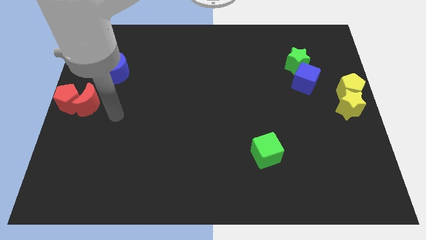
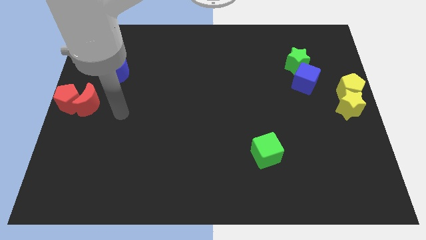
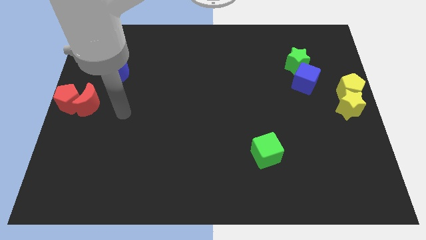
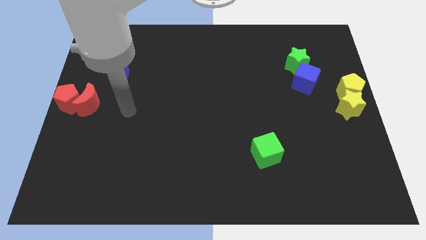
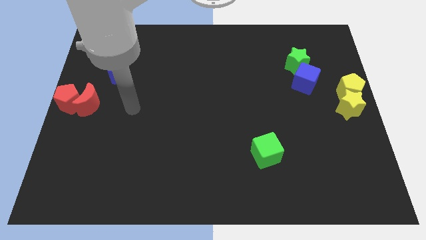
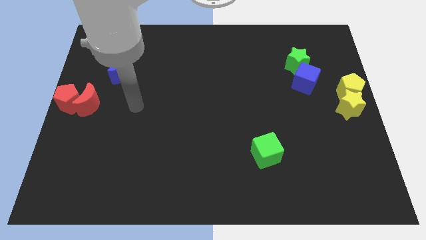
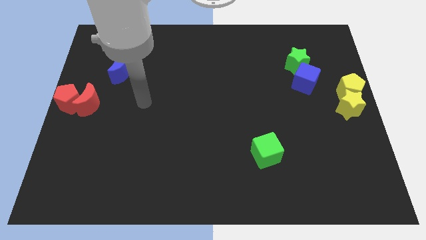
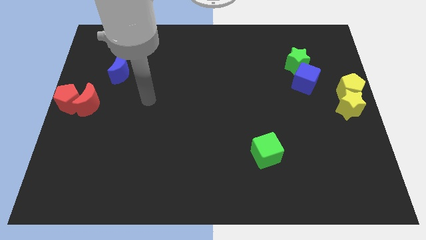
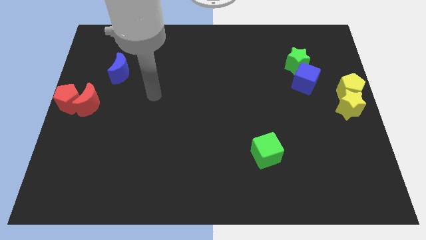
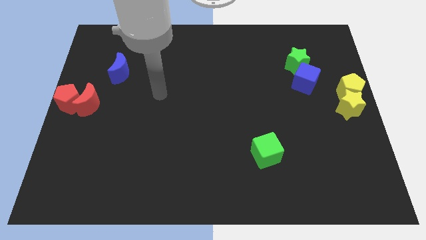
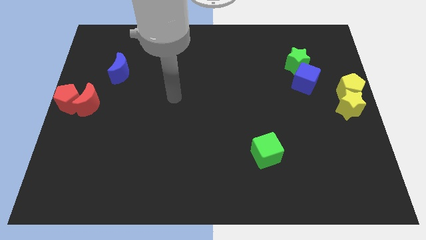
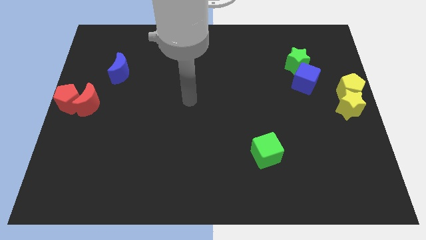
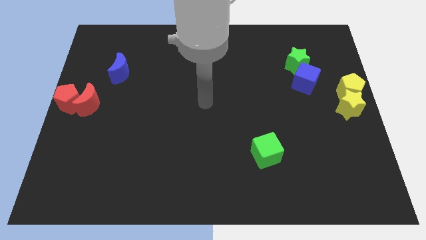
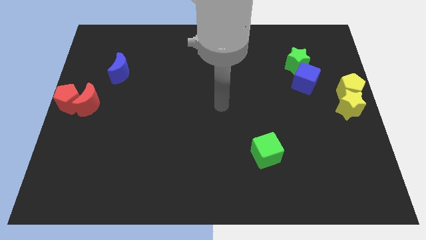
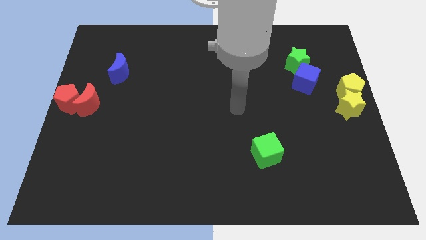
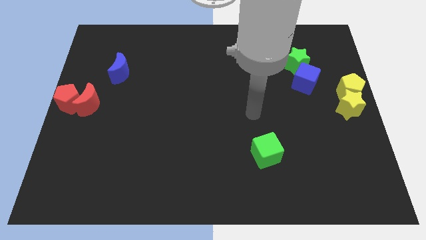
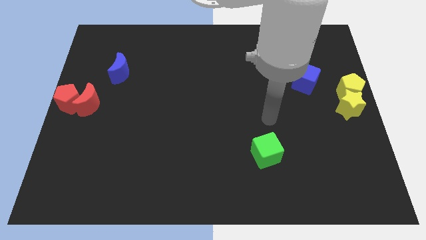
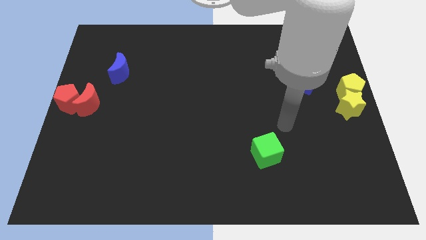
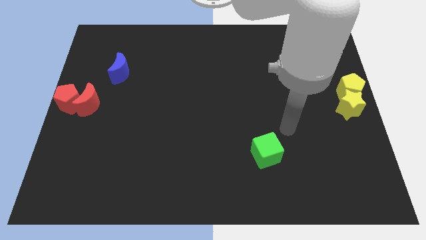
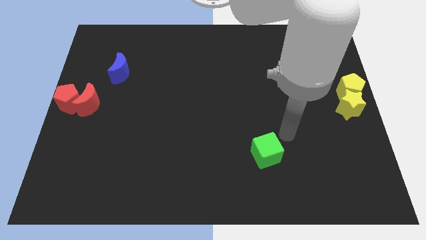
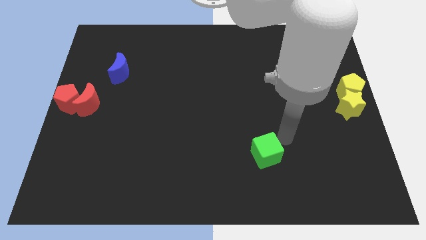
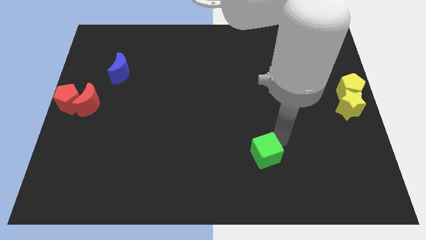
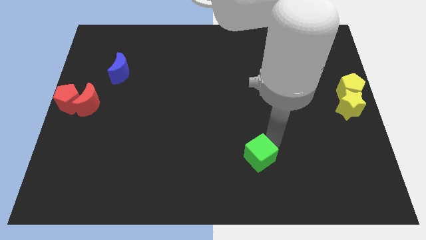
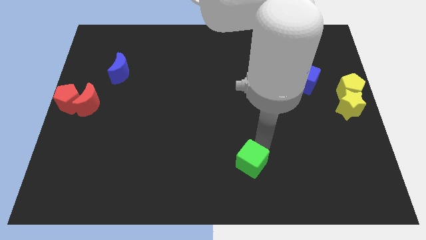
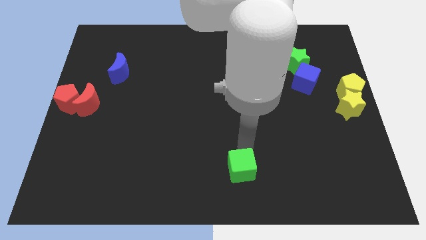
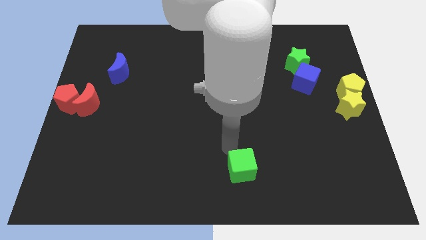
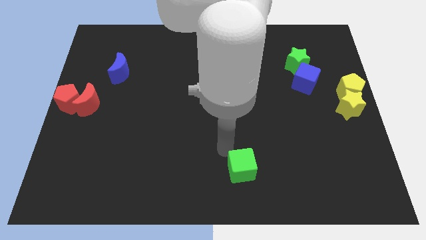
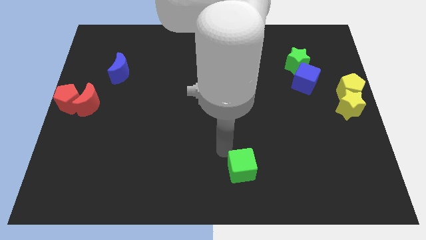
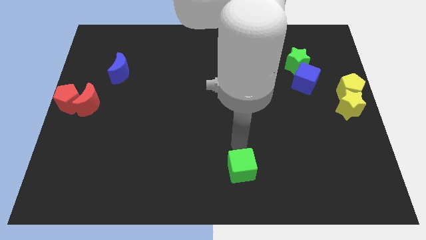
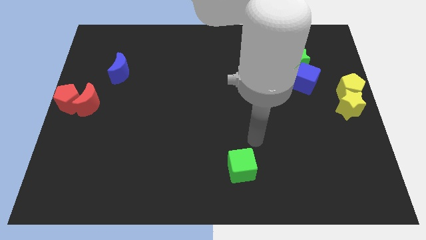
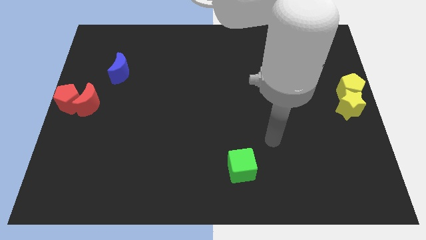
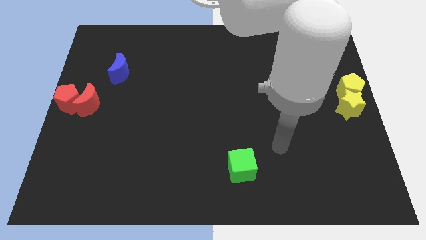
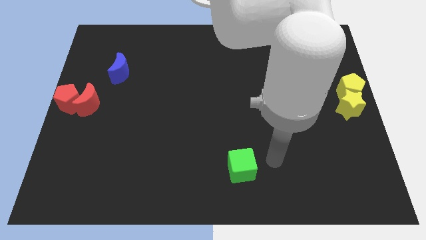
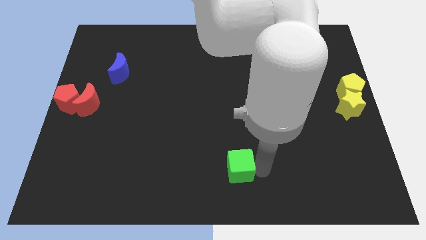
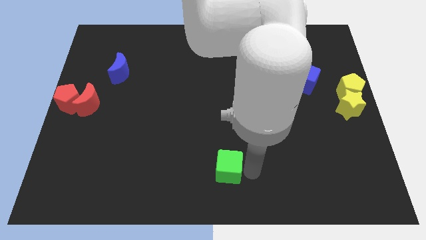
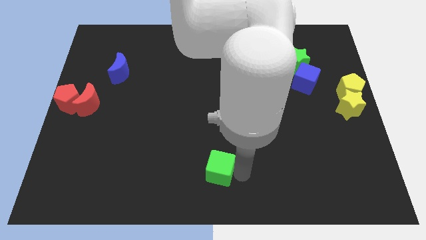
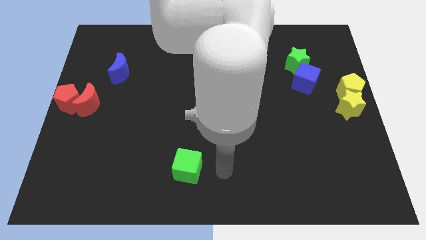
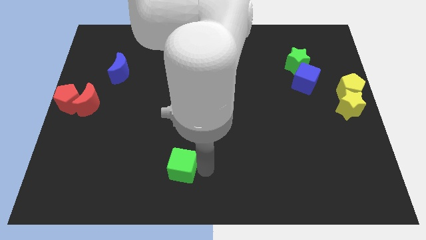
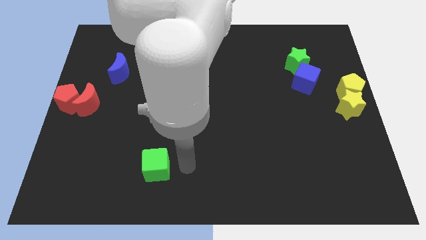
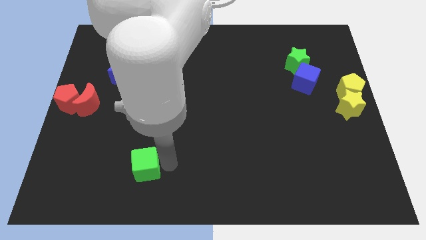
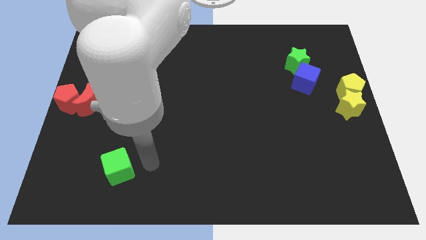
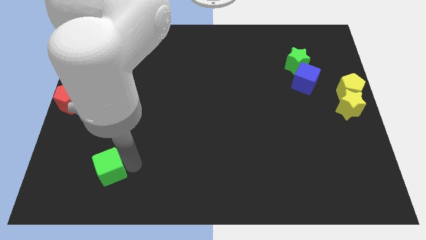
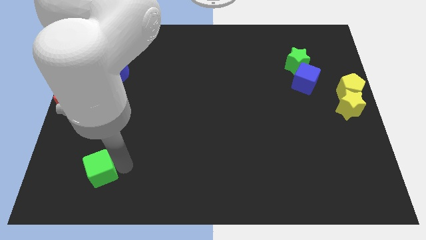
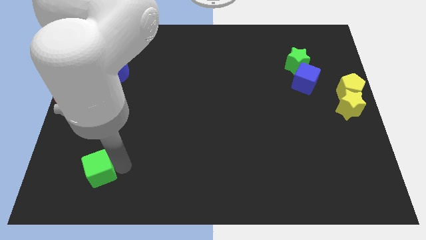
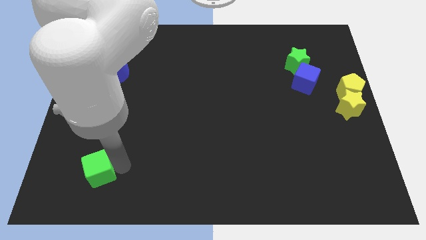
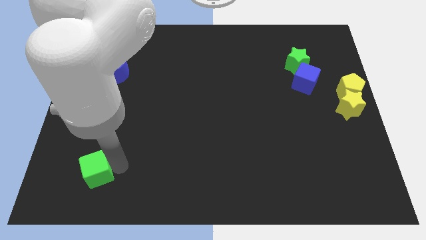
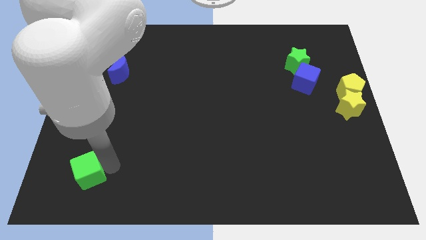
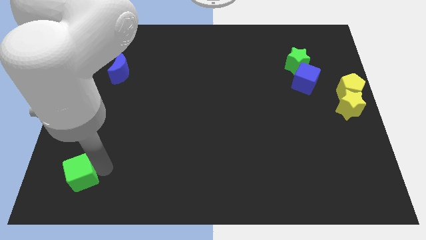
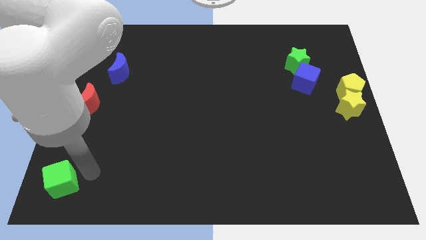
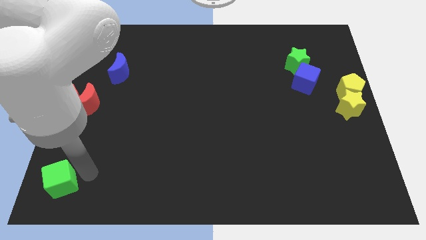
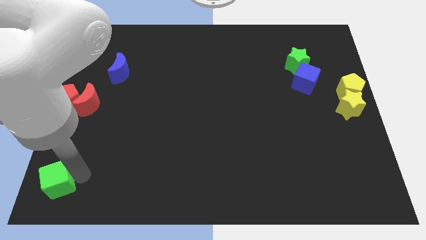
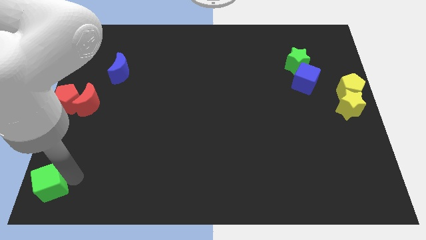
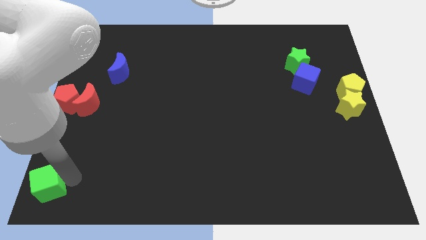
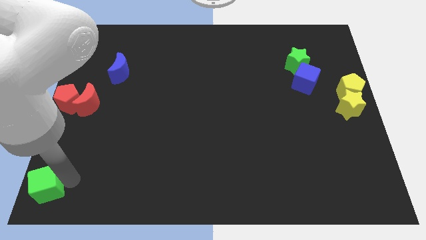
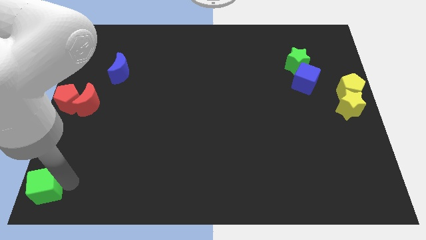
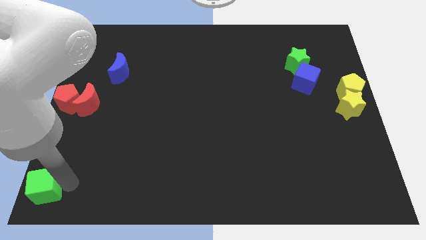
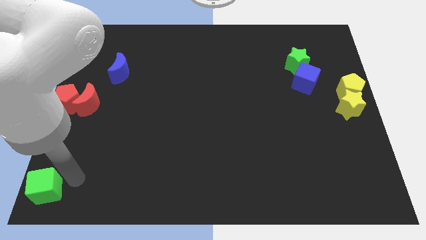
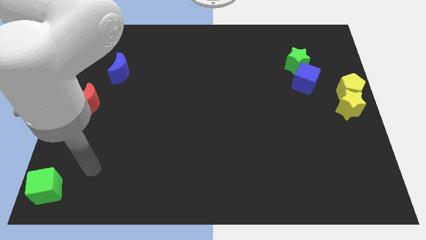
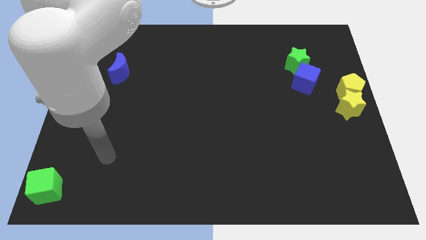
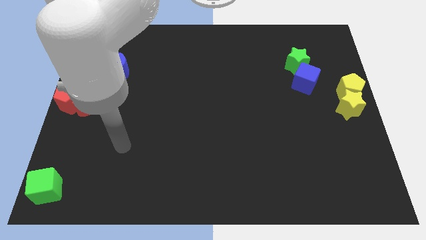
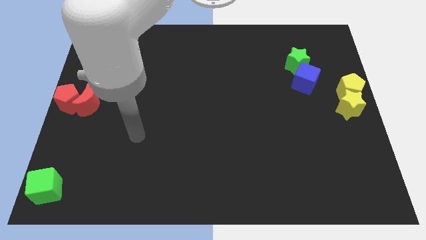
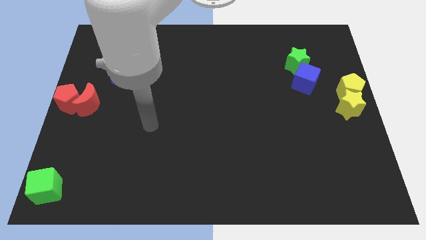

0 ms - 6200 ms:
place the green cube to the bottom left corner of the board

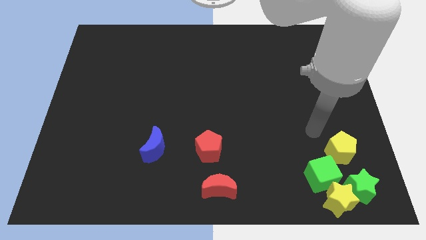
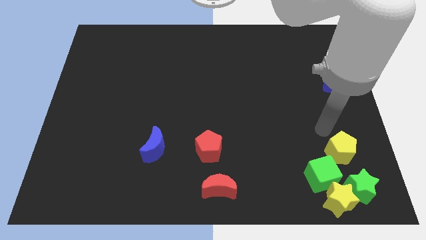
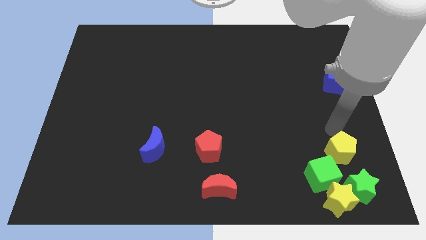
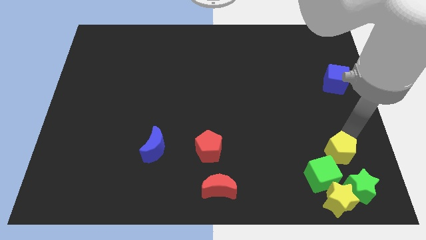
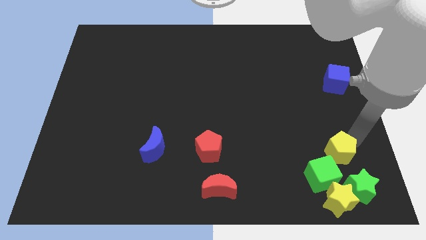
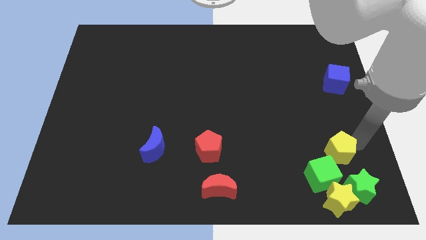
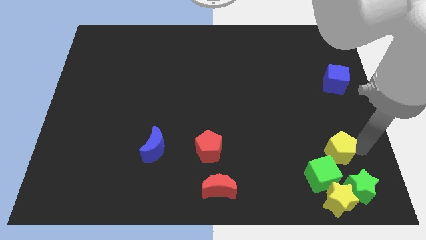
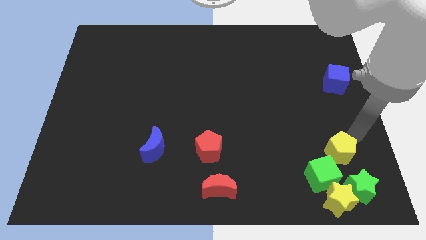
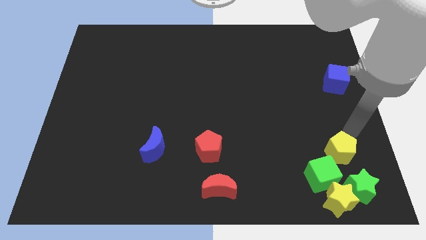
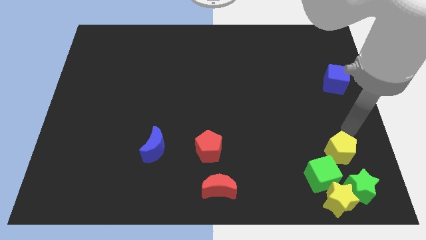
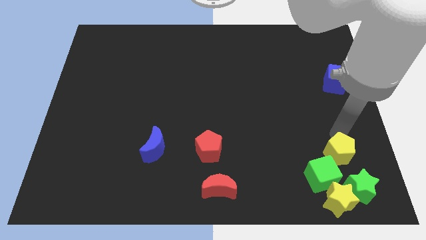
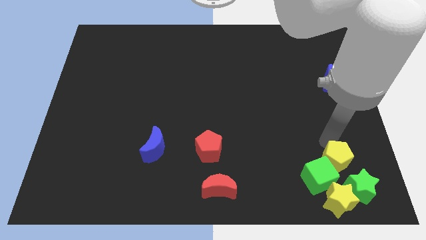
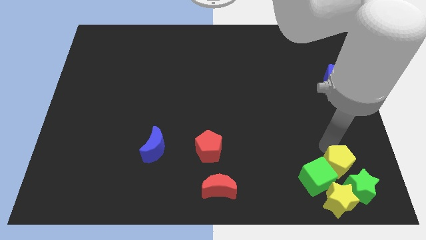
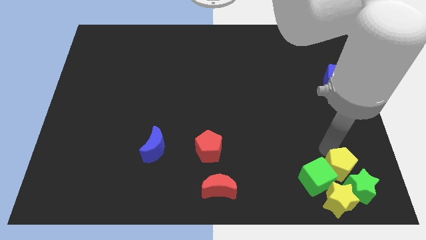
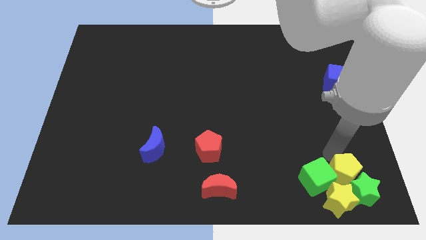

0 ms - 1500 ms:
slide the yellow pentagon into the green cube

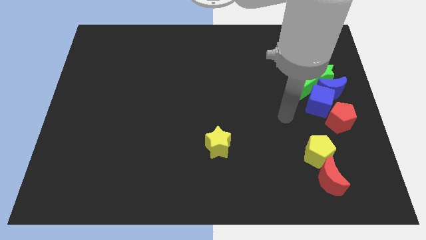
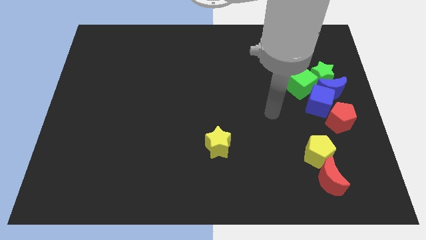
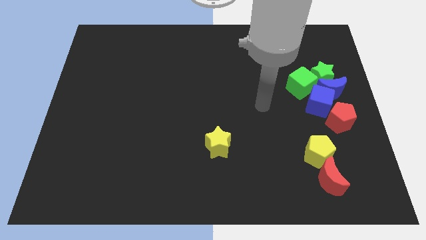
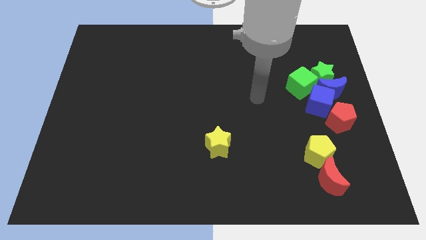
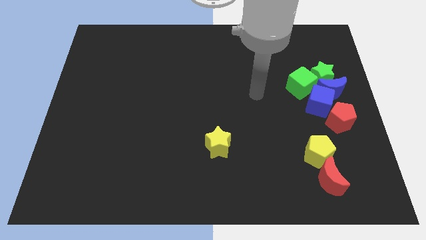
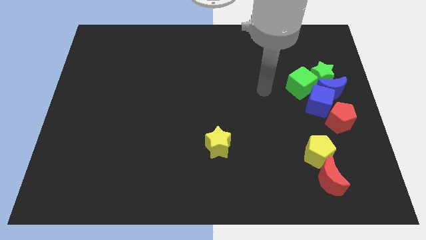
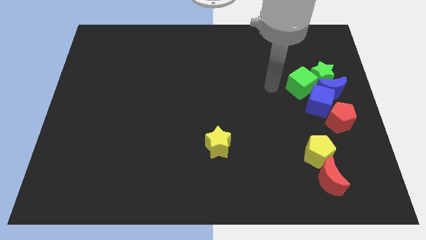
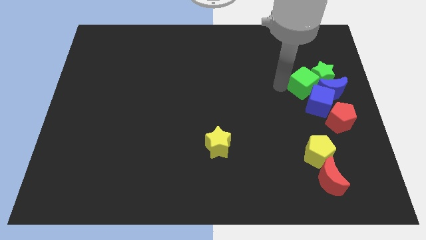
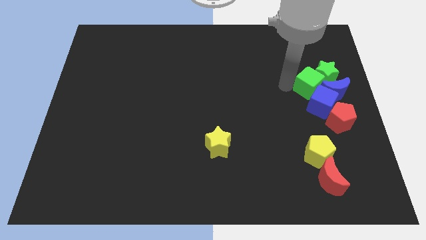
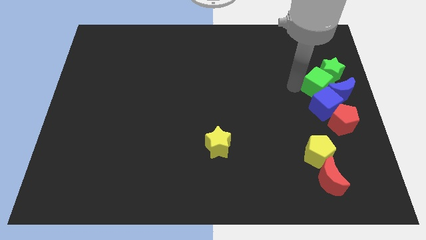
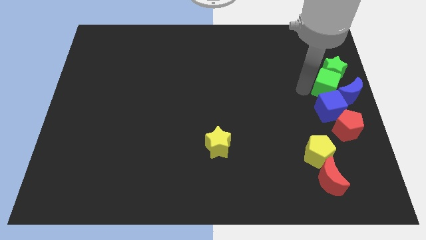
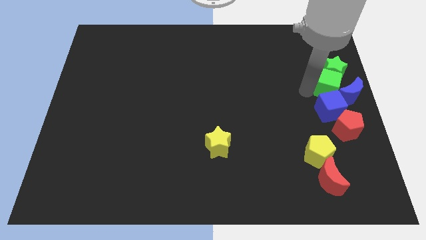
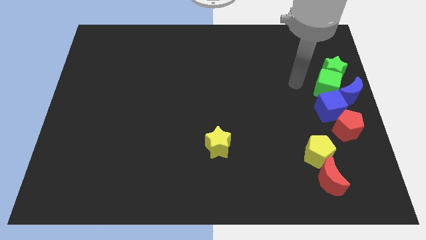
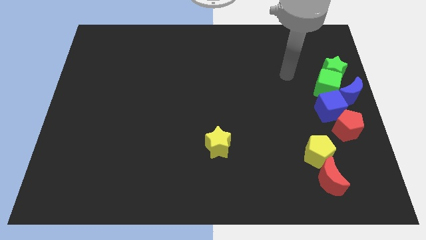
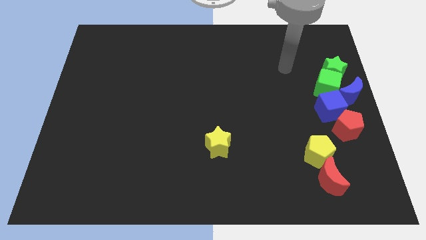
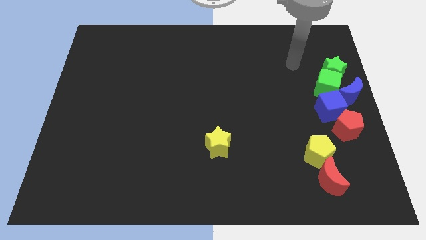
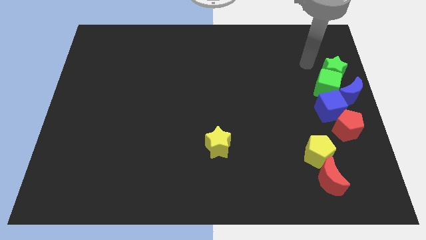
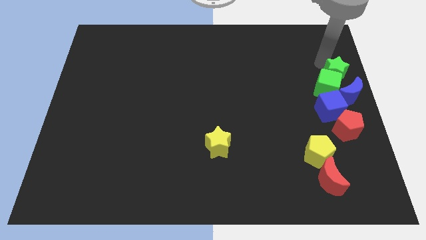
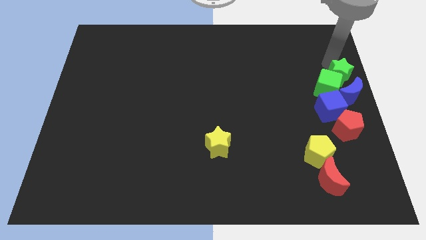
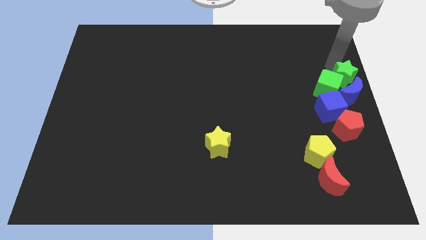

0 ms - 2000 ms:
move the green blocks towards the right
